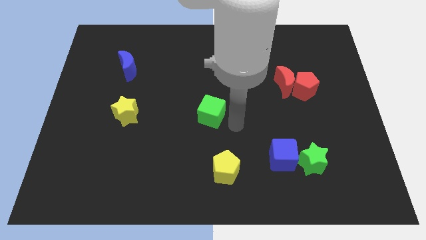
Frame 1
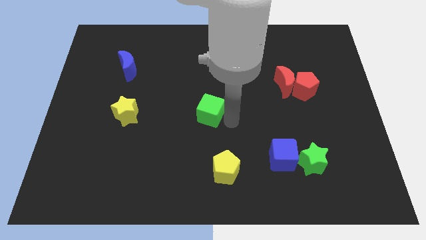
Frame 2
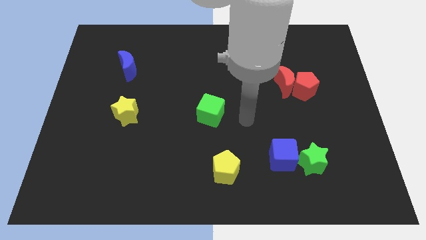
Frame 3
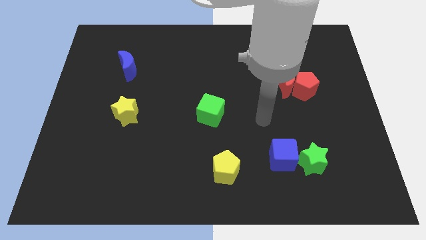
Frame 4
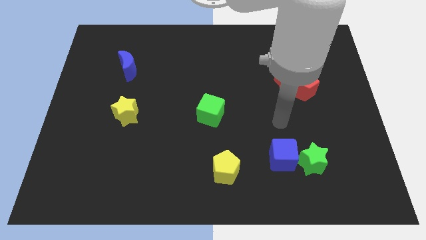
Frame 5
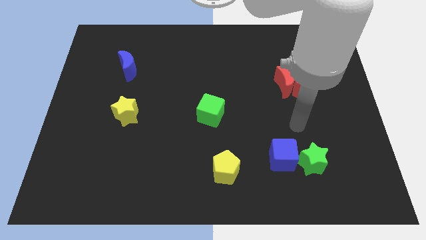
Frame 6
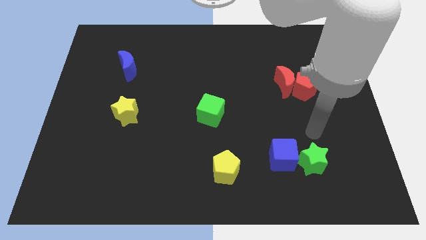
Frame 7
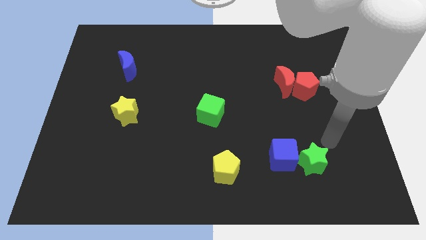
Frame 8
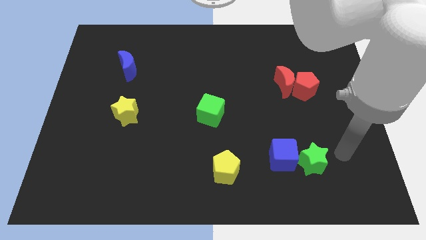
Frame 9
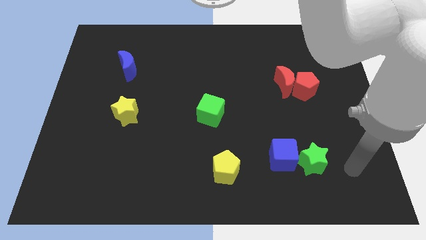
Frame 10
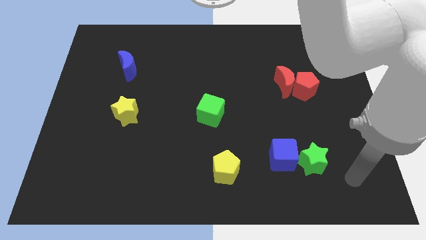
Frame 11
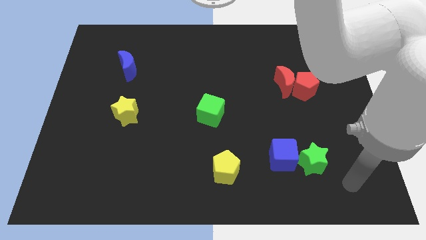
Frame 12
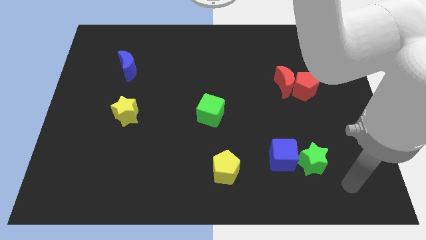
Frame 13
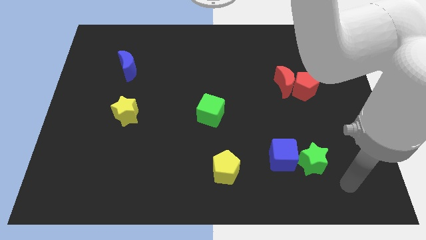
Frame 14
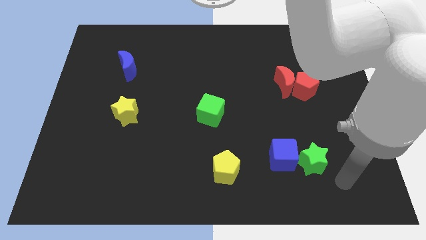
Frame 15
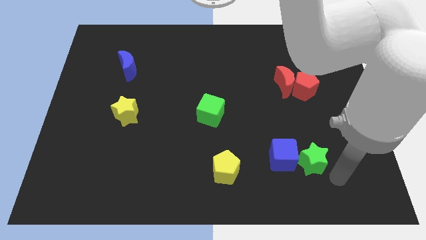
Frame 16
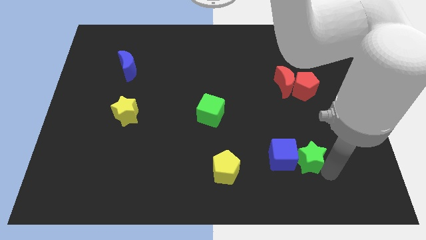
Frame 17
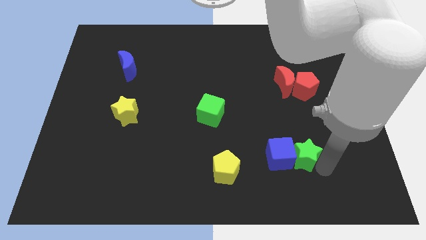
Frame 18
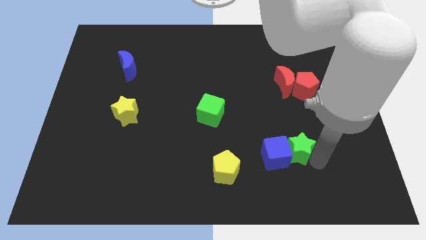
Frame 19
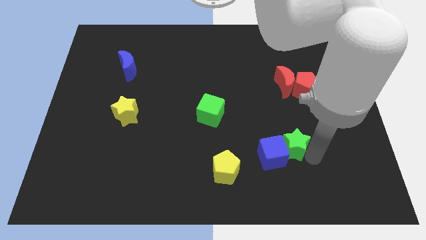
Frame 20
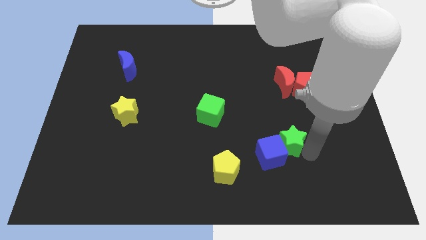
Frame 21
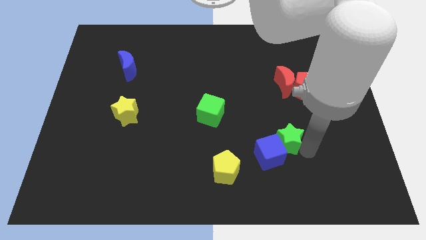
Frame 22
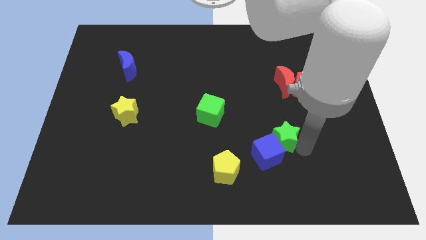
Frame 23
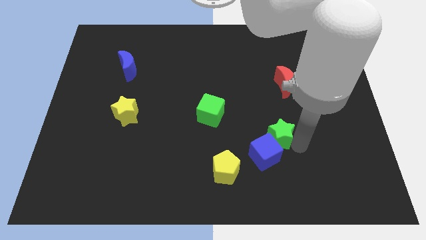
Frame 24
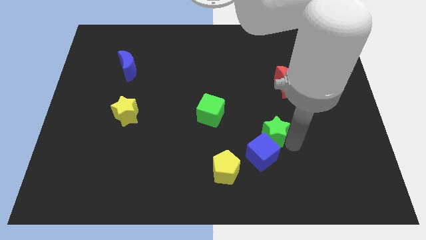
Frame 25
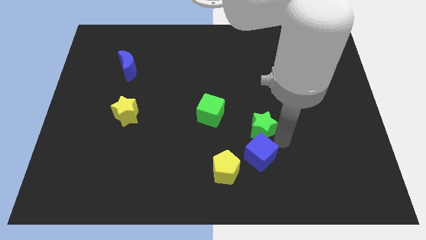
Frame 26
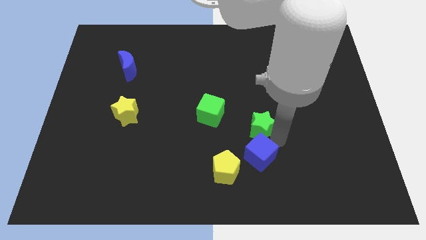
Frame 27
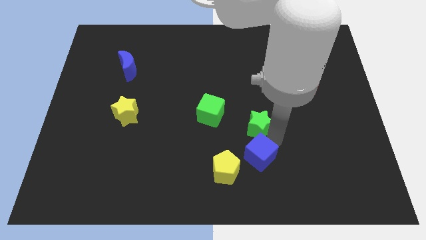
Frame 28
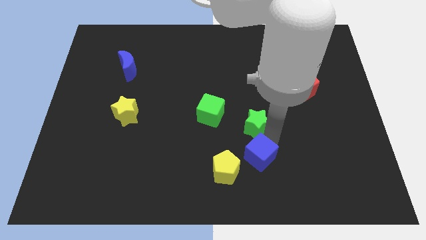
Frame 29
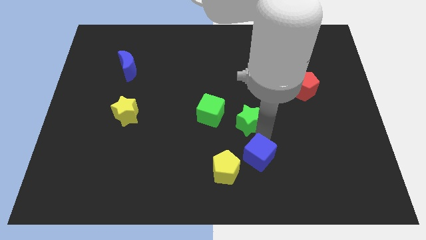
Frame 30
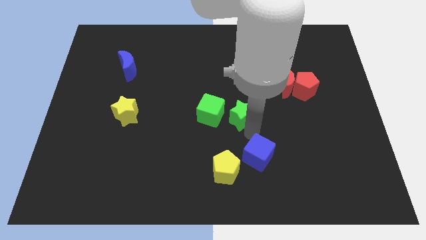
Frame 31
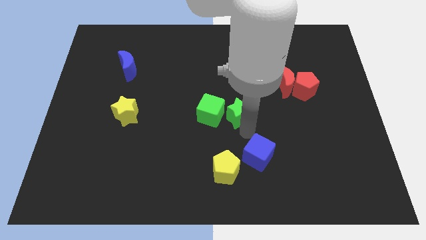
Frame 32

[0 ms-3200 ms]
place the green star parallel right to the green cube

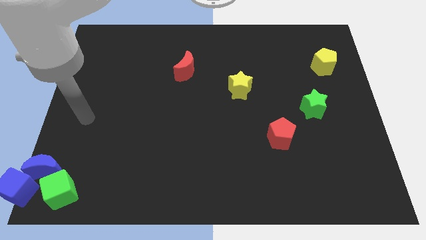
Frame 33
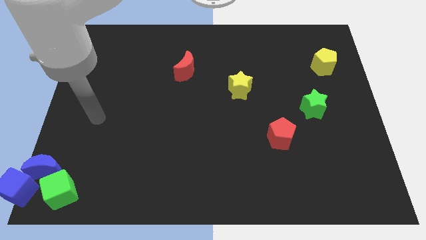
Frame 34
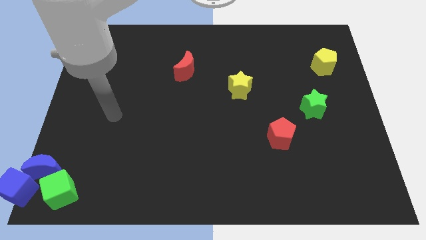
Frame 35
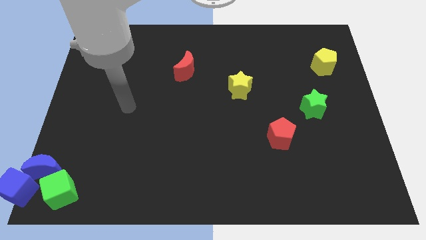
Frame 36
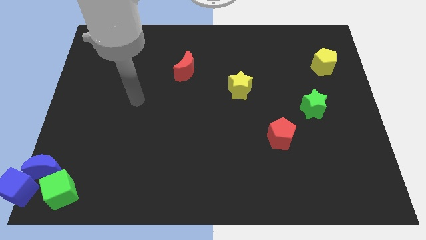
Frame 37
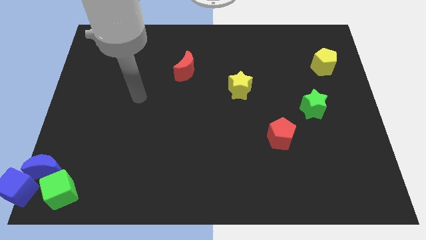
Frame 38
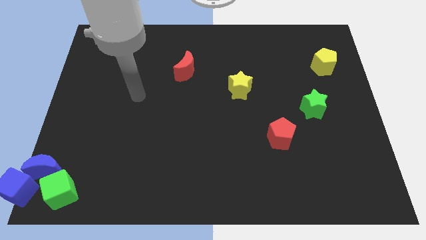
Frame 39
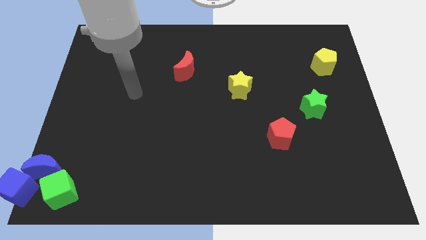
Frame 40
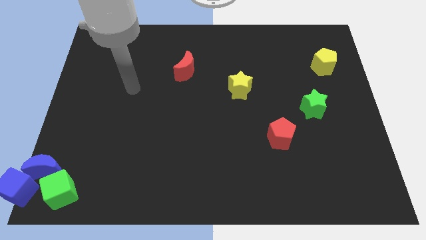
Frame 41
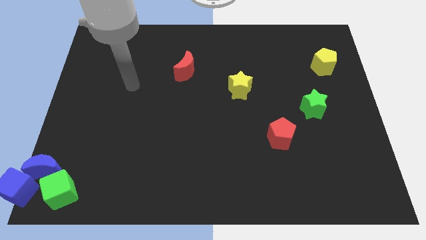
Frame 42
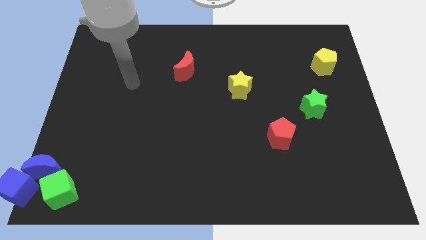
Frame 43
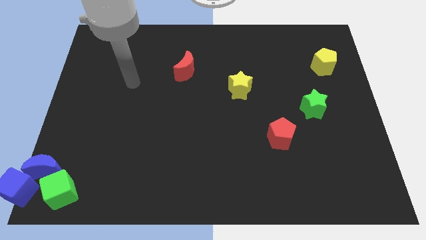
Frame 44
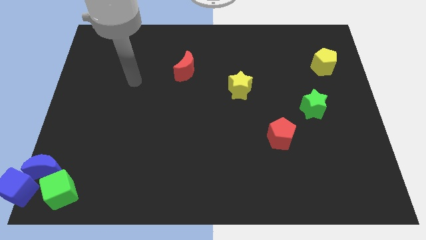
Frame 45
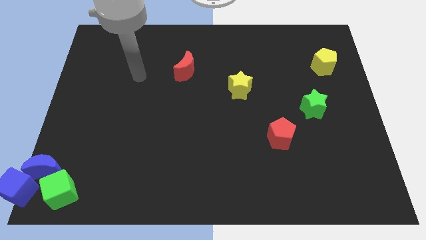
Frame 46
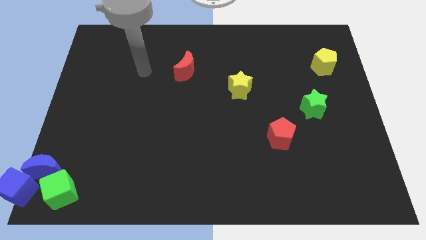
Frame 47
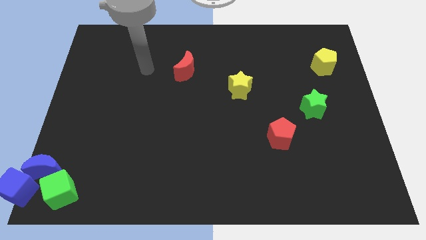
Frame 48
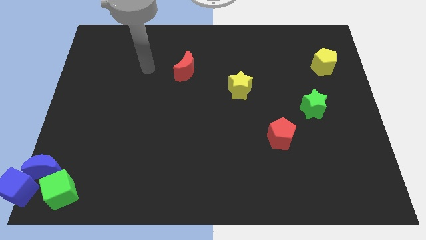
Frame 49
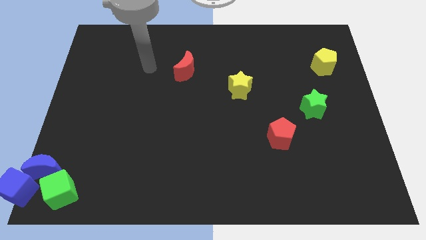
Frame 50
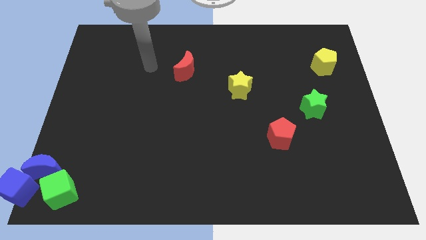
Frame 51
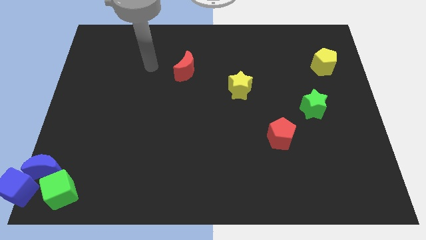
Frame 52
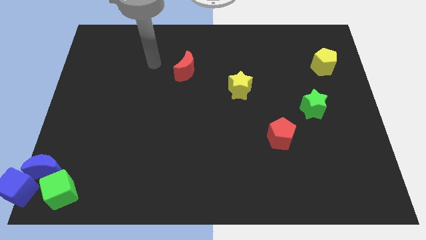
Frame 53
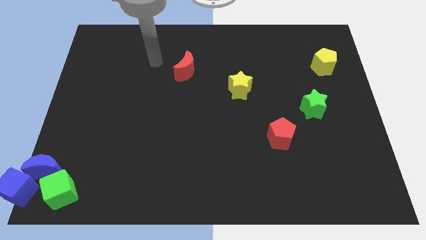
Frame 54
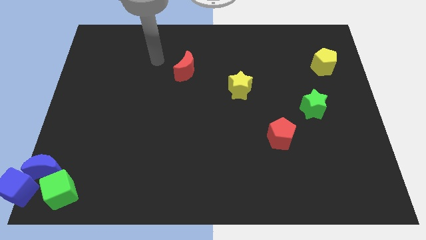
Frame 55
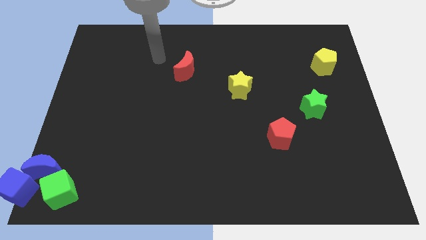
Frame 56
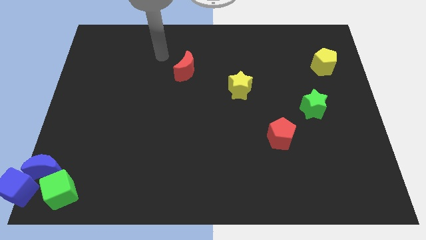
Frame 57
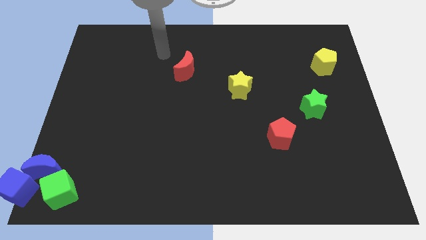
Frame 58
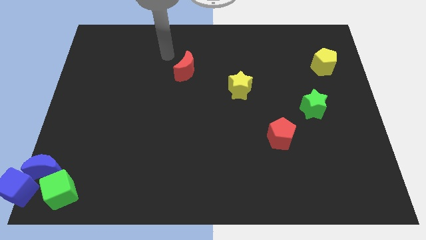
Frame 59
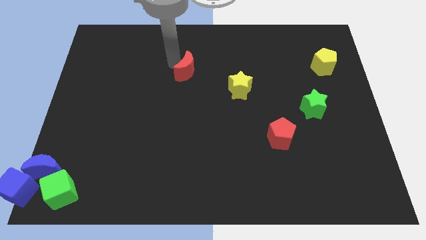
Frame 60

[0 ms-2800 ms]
move your arm and point to the left of red crescent

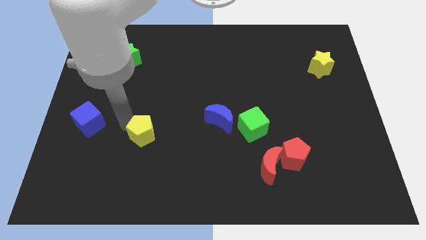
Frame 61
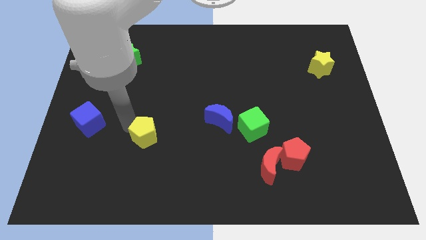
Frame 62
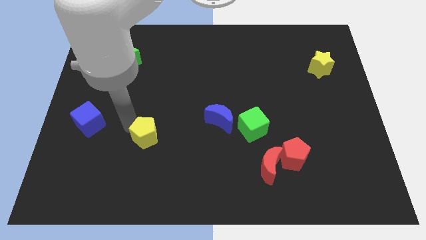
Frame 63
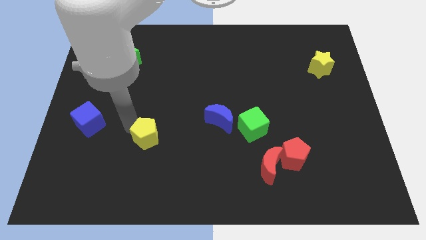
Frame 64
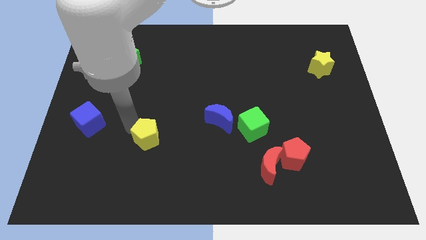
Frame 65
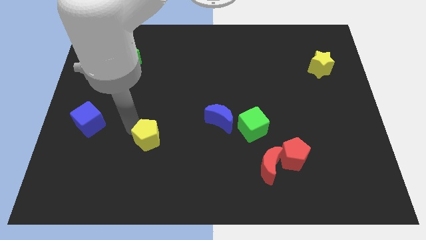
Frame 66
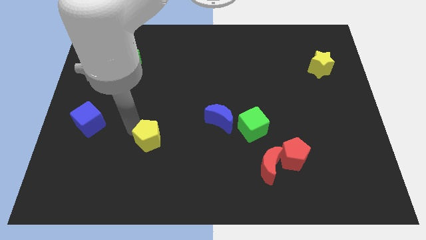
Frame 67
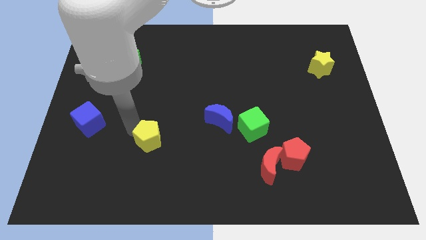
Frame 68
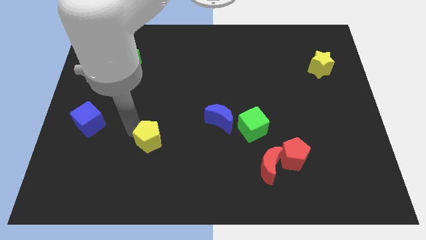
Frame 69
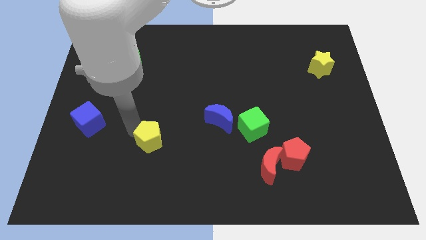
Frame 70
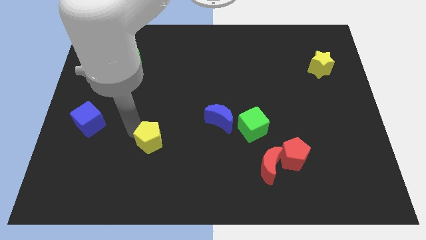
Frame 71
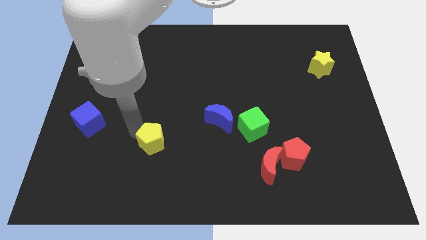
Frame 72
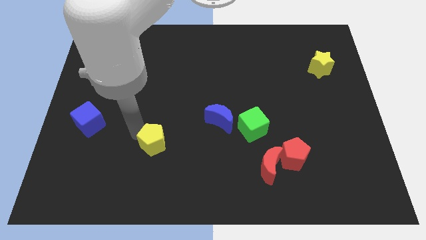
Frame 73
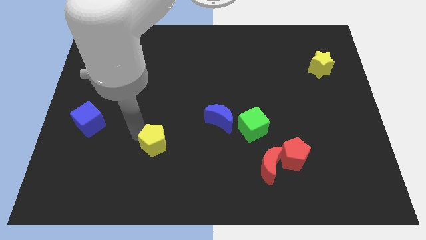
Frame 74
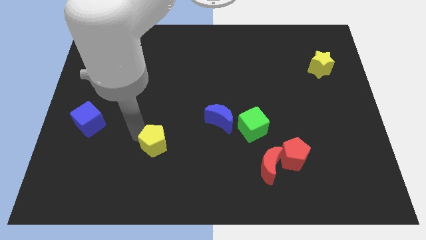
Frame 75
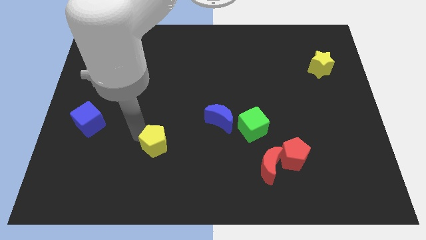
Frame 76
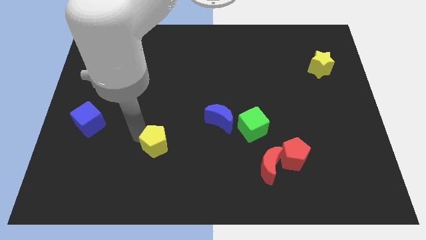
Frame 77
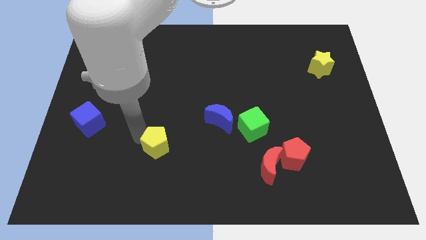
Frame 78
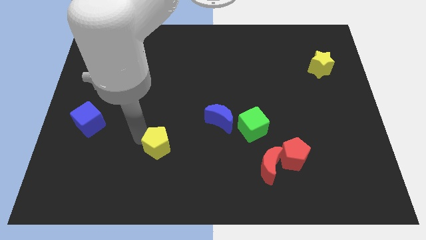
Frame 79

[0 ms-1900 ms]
push the yellow pentagon slightly to the bottom

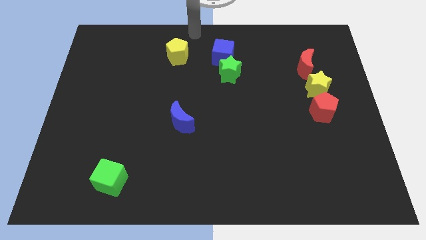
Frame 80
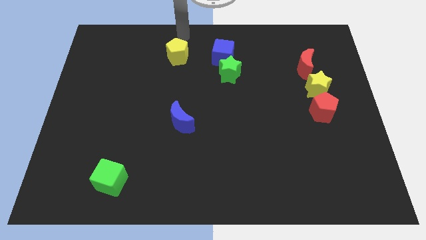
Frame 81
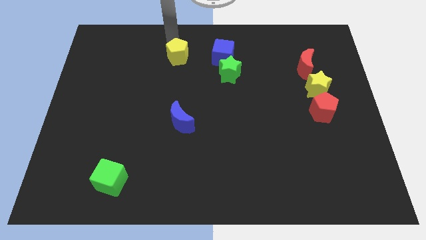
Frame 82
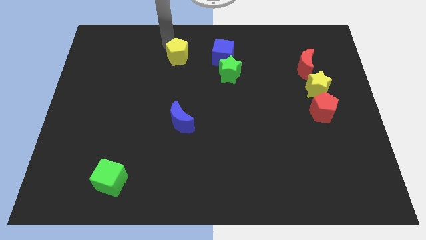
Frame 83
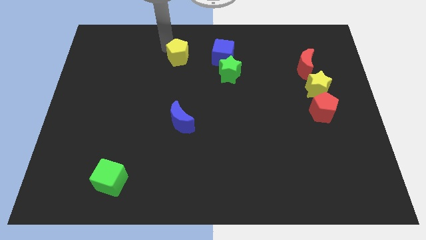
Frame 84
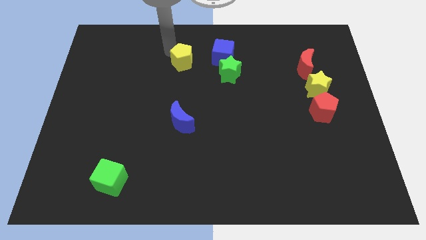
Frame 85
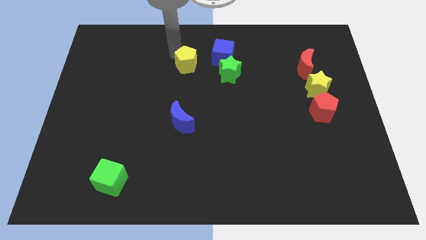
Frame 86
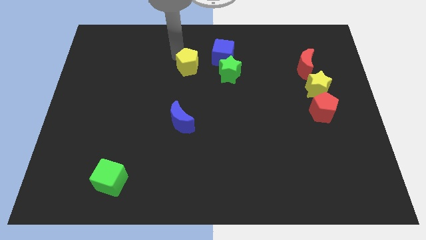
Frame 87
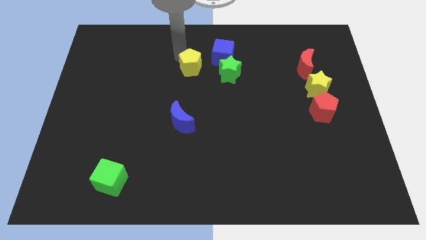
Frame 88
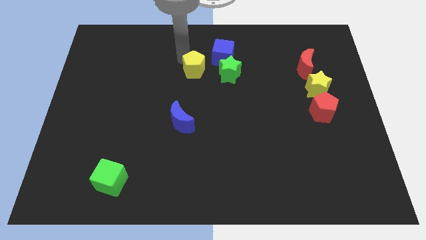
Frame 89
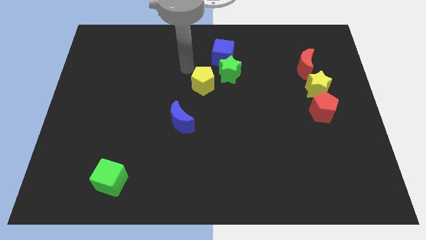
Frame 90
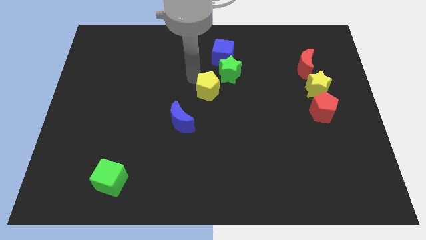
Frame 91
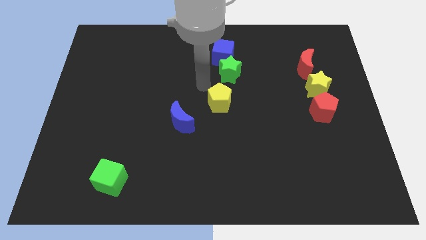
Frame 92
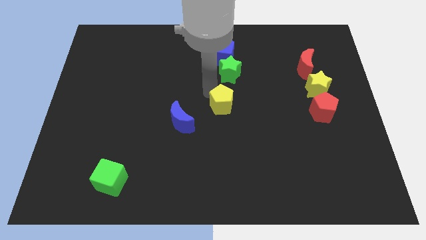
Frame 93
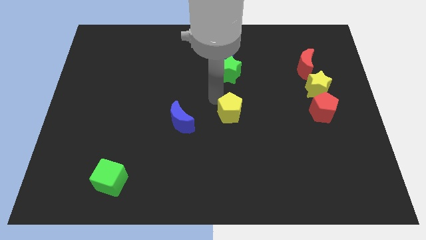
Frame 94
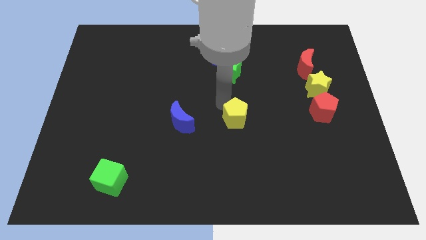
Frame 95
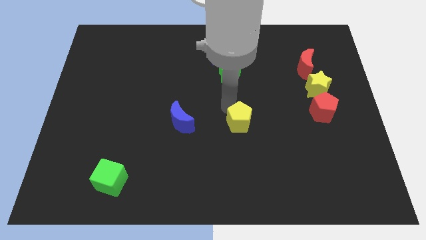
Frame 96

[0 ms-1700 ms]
push the yellow pentagon to the bottom side of the green star
